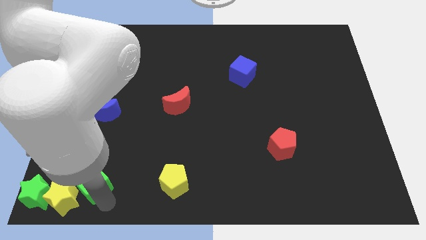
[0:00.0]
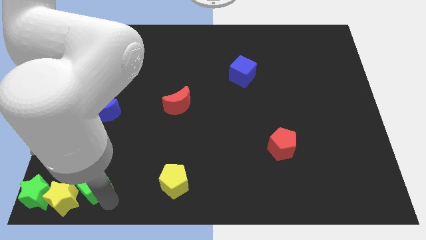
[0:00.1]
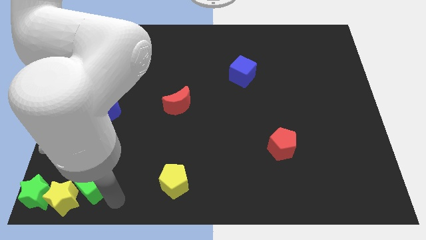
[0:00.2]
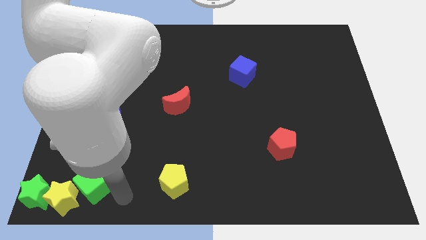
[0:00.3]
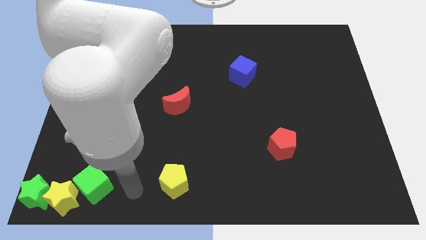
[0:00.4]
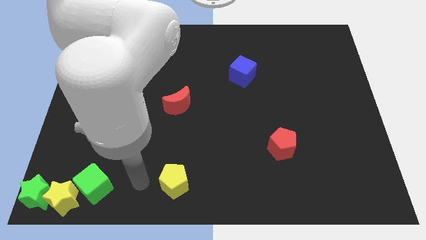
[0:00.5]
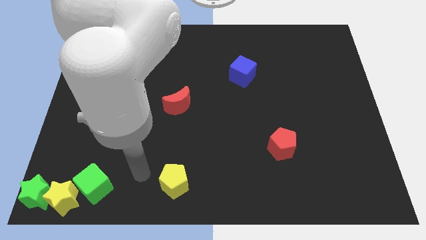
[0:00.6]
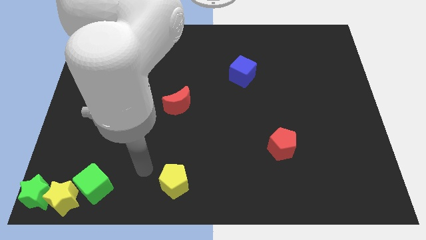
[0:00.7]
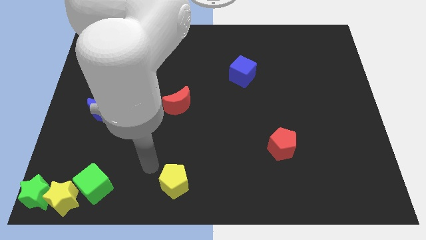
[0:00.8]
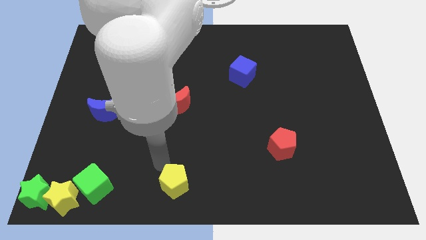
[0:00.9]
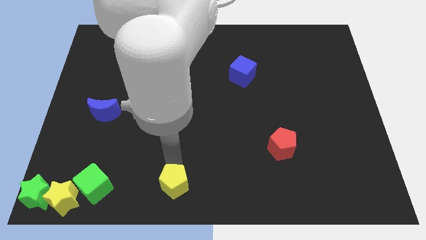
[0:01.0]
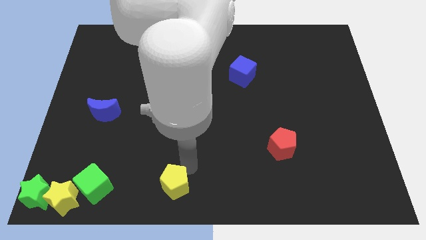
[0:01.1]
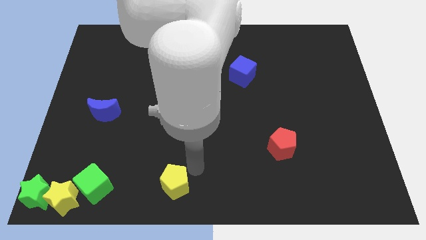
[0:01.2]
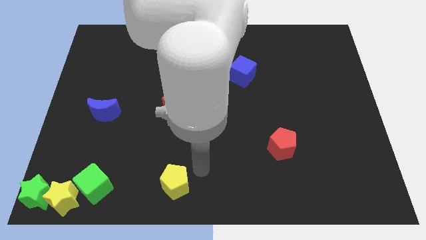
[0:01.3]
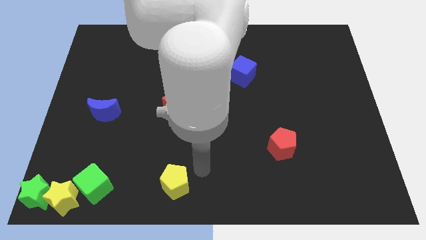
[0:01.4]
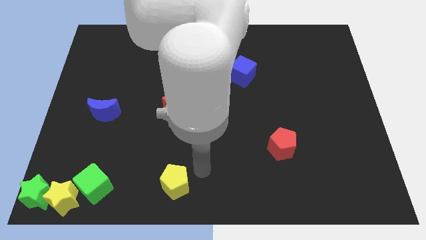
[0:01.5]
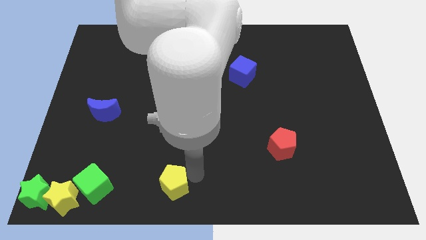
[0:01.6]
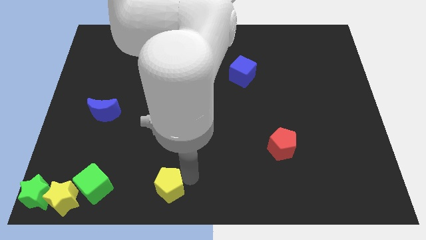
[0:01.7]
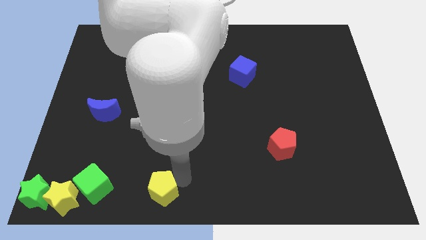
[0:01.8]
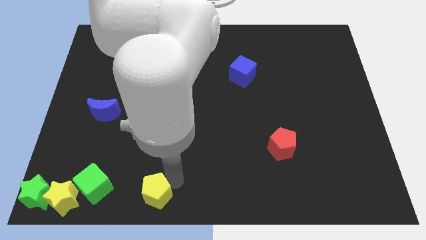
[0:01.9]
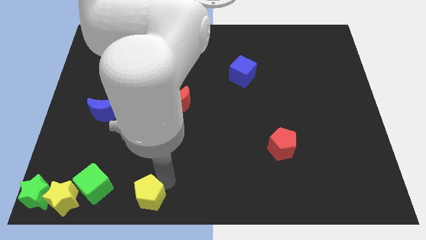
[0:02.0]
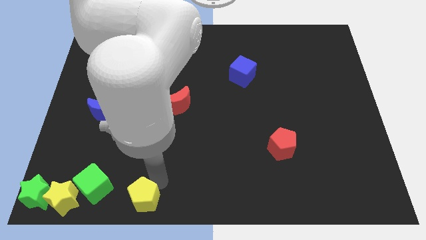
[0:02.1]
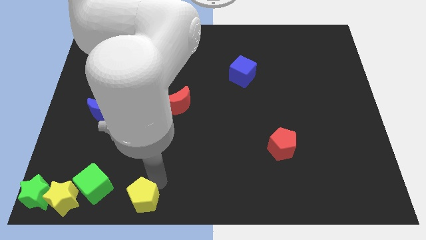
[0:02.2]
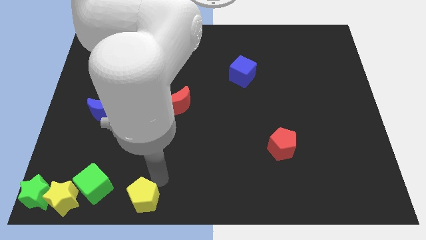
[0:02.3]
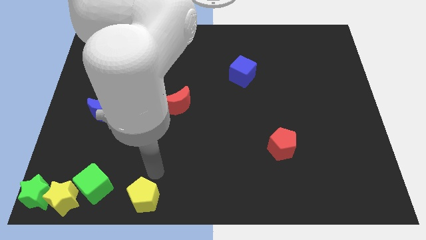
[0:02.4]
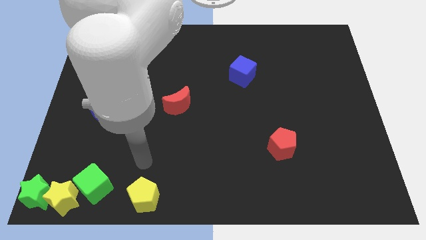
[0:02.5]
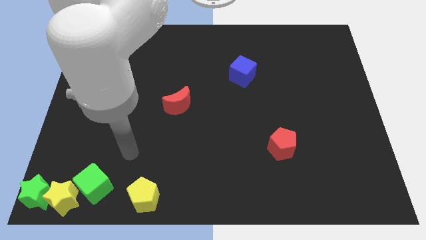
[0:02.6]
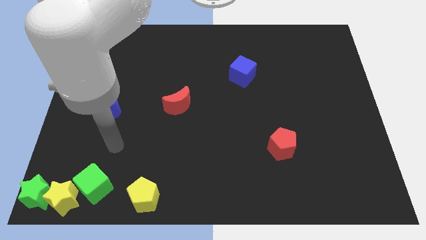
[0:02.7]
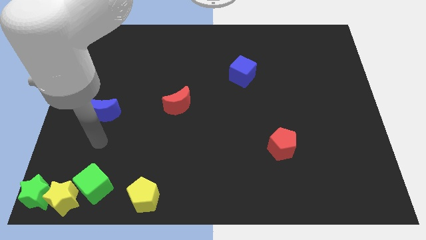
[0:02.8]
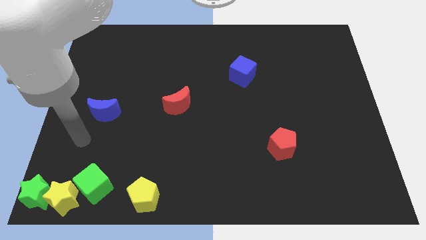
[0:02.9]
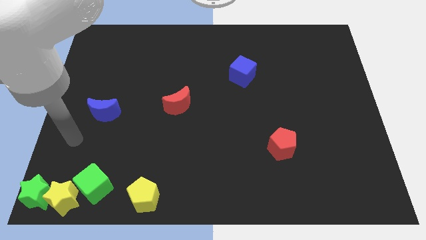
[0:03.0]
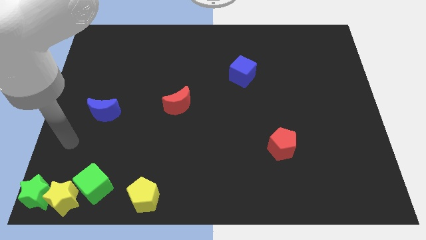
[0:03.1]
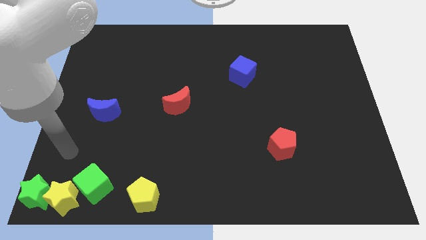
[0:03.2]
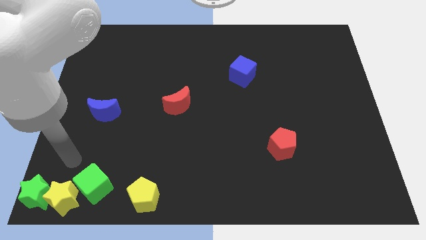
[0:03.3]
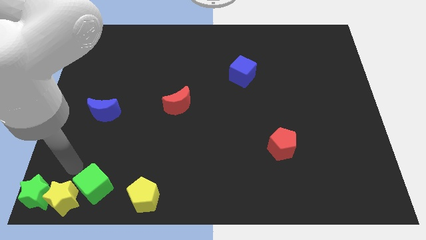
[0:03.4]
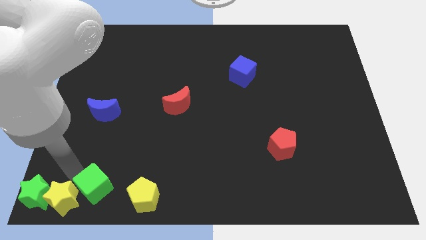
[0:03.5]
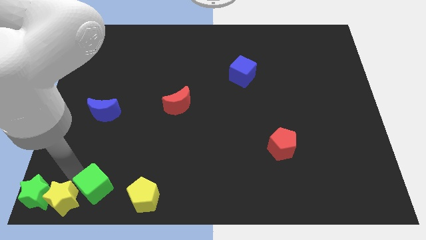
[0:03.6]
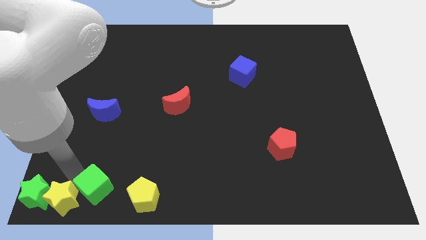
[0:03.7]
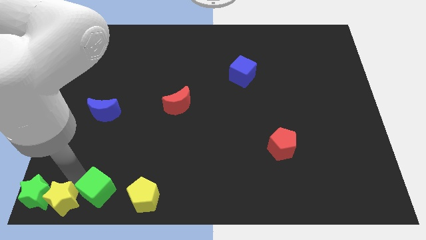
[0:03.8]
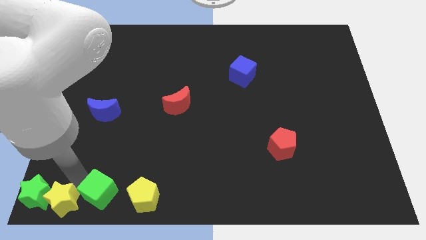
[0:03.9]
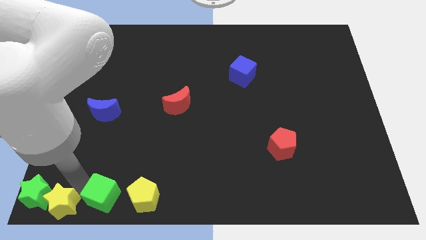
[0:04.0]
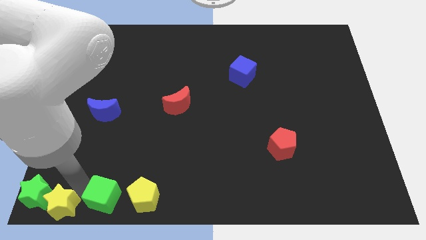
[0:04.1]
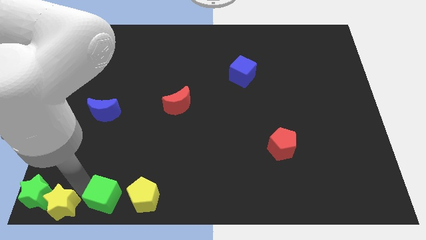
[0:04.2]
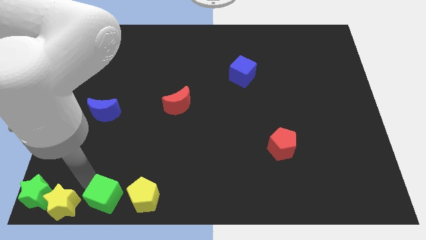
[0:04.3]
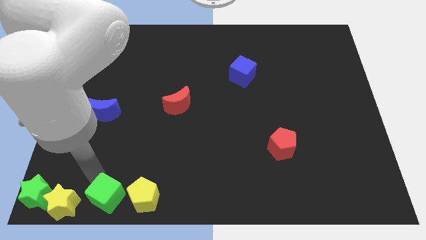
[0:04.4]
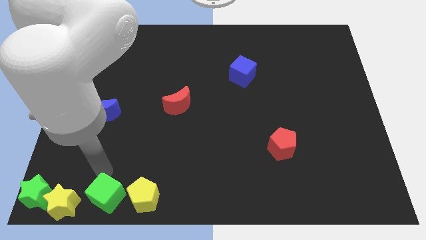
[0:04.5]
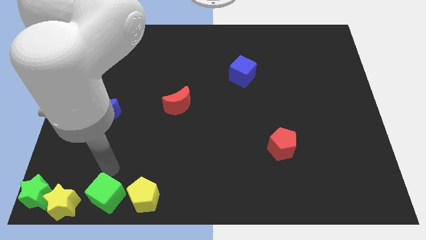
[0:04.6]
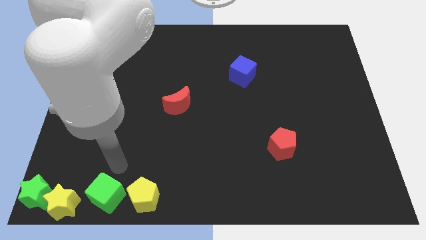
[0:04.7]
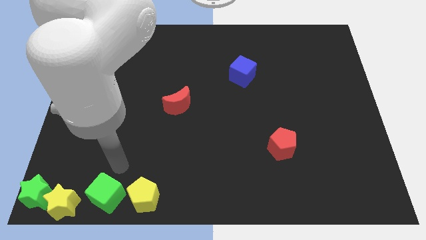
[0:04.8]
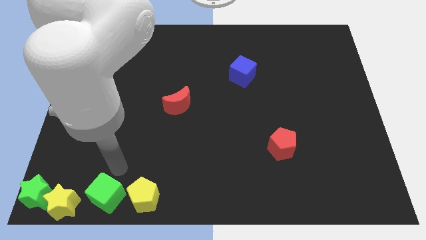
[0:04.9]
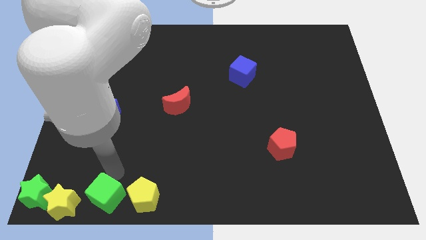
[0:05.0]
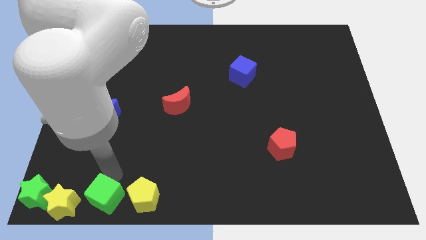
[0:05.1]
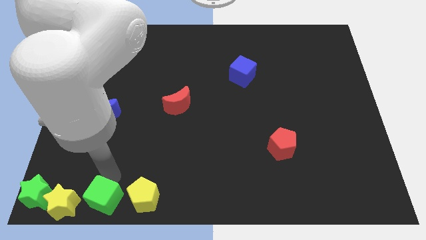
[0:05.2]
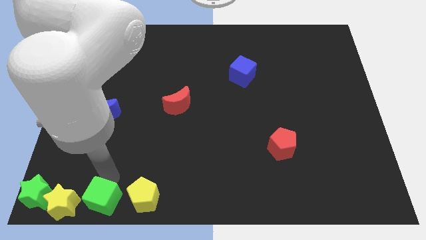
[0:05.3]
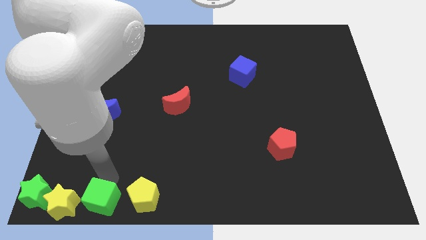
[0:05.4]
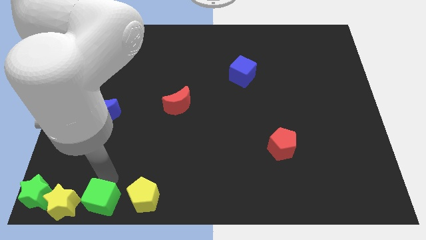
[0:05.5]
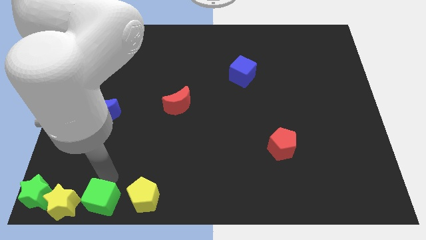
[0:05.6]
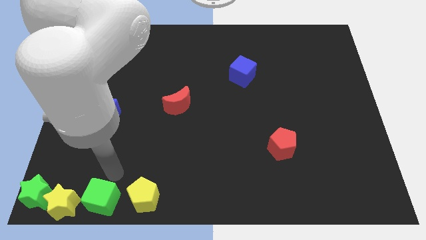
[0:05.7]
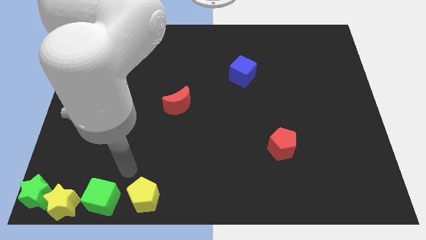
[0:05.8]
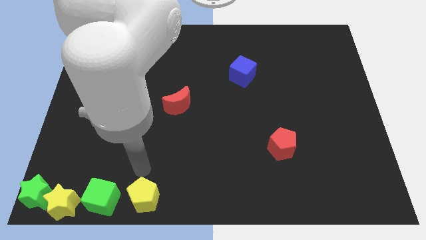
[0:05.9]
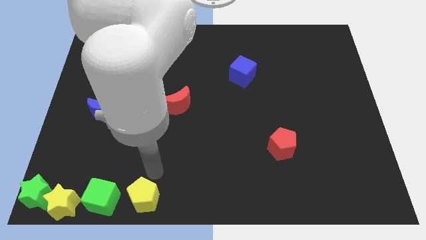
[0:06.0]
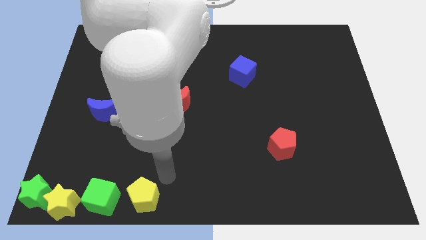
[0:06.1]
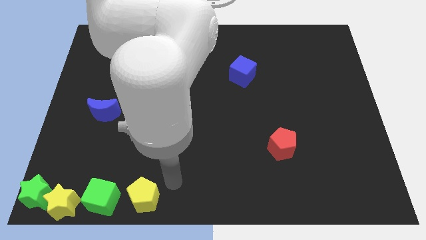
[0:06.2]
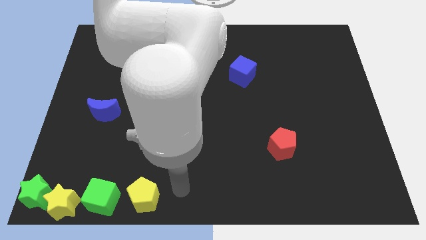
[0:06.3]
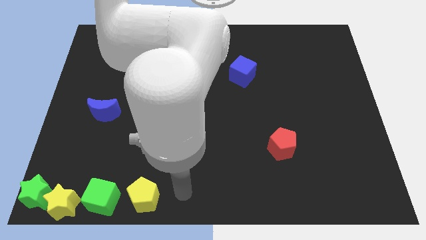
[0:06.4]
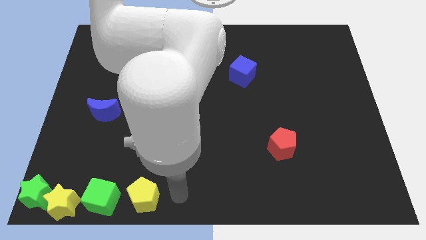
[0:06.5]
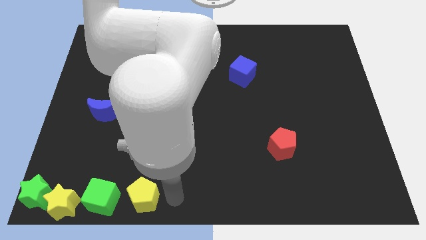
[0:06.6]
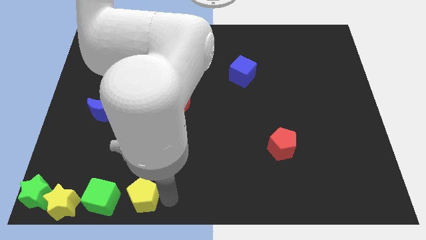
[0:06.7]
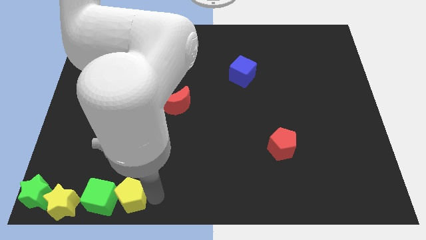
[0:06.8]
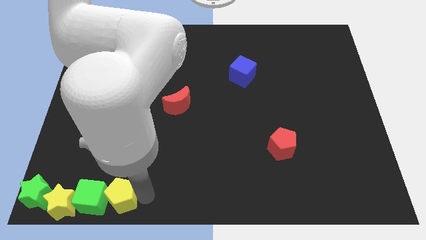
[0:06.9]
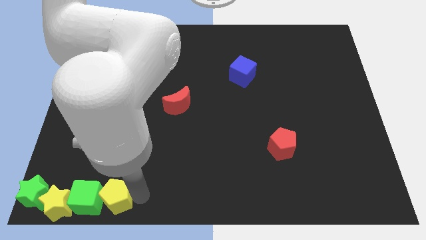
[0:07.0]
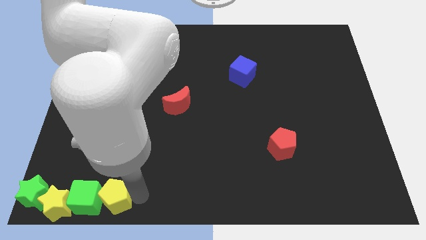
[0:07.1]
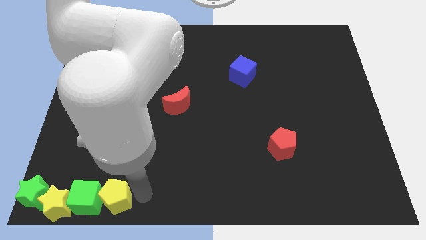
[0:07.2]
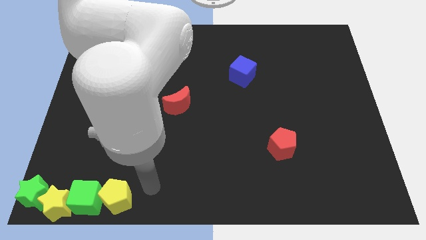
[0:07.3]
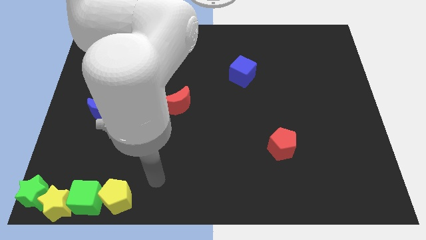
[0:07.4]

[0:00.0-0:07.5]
move the yellow pentagon right to the green cube

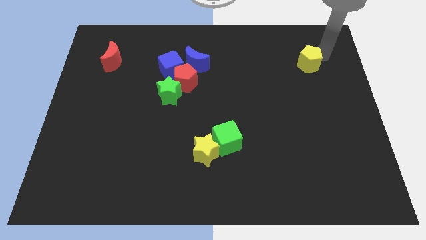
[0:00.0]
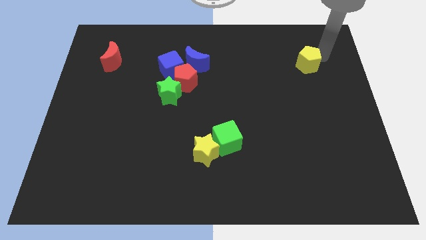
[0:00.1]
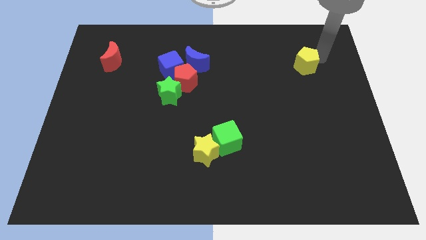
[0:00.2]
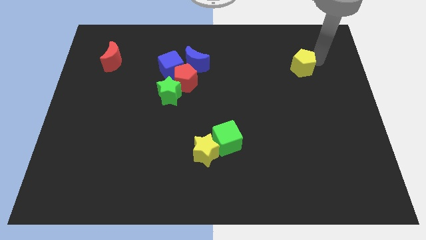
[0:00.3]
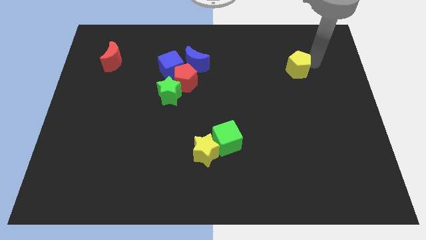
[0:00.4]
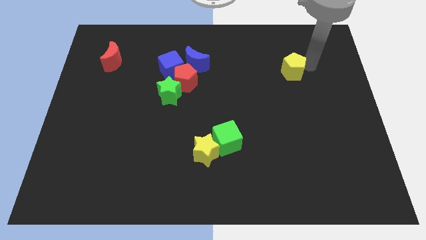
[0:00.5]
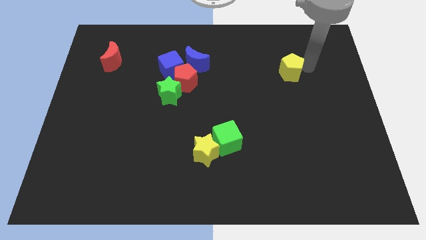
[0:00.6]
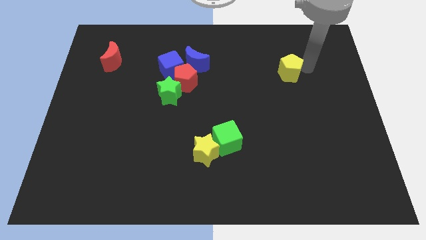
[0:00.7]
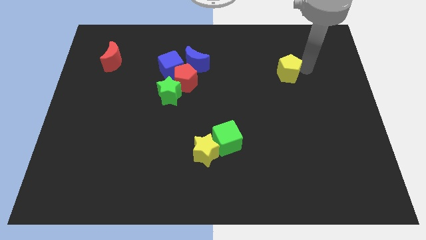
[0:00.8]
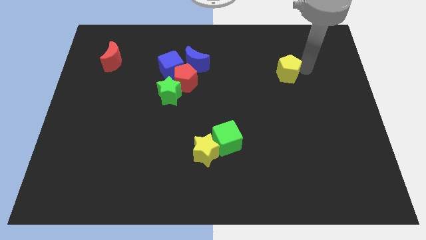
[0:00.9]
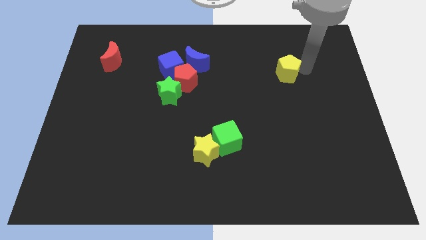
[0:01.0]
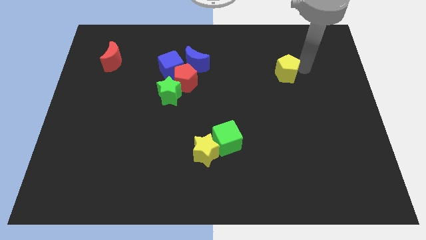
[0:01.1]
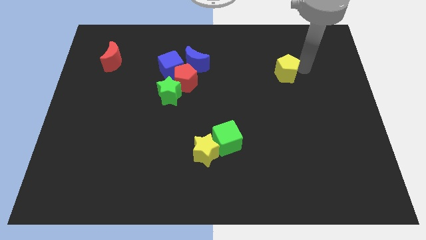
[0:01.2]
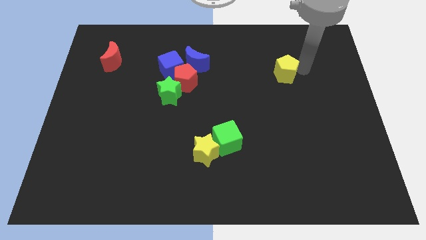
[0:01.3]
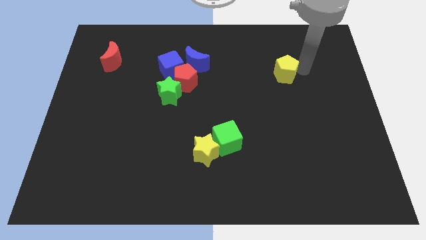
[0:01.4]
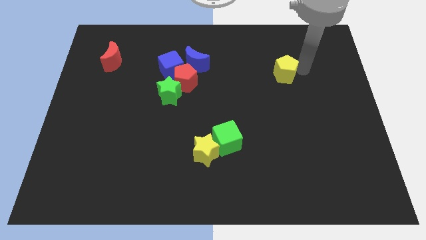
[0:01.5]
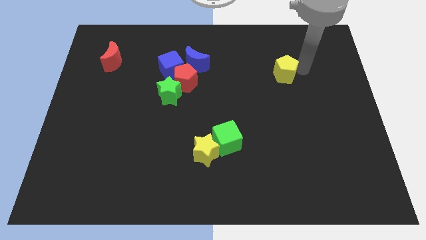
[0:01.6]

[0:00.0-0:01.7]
slide the yellow pentagon to the right of blue moon
